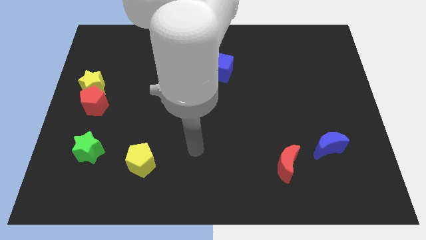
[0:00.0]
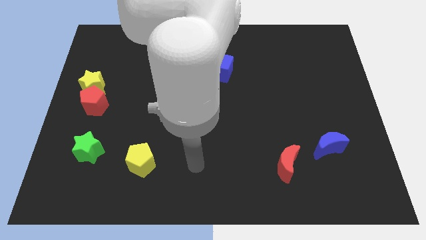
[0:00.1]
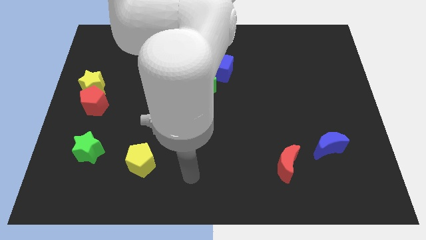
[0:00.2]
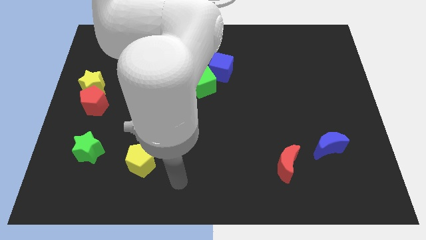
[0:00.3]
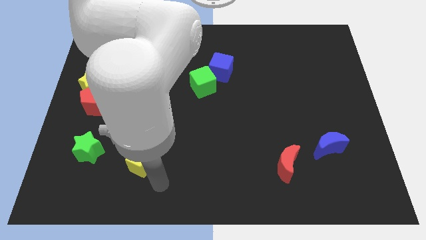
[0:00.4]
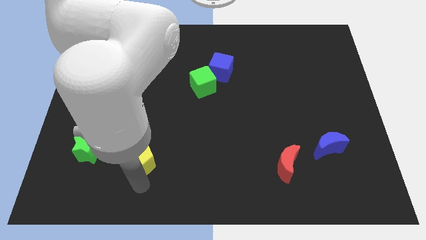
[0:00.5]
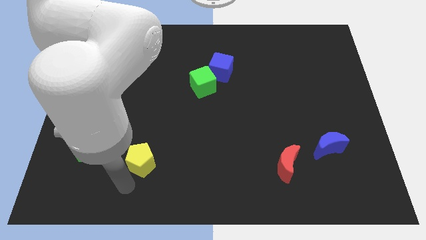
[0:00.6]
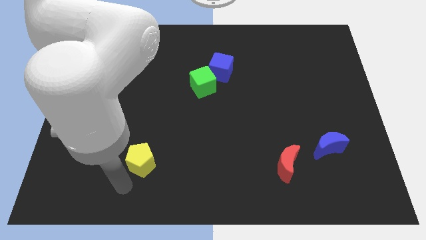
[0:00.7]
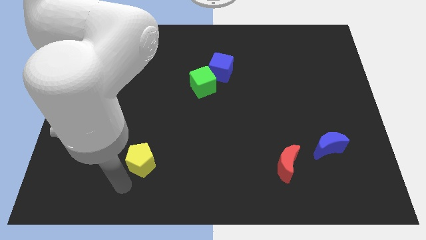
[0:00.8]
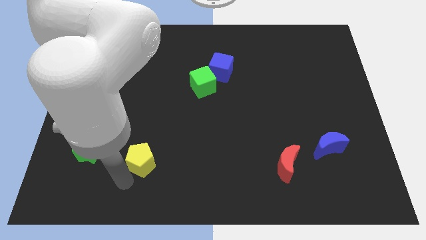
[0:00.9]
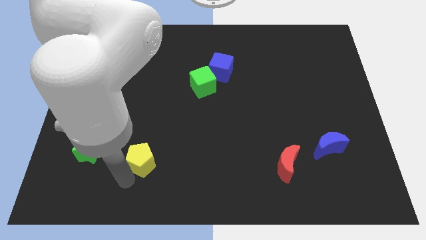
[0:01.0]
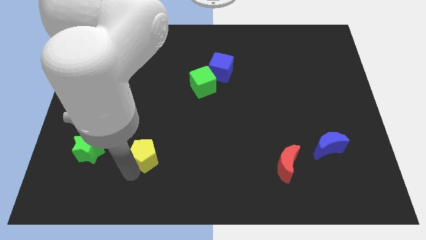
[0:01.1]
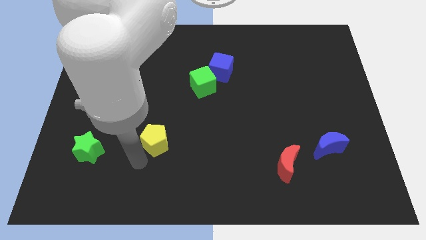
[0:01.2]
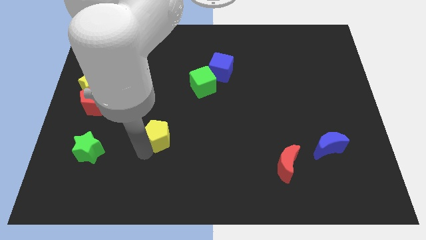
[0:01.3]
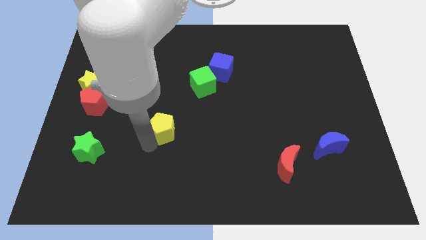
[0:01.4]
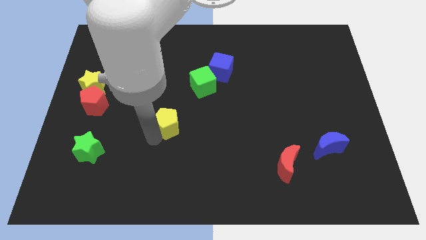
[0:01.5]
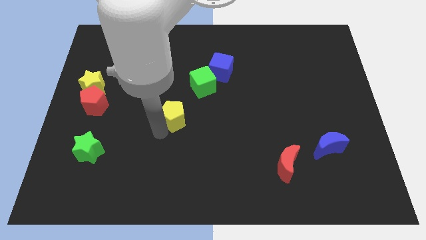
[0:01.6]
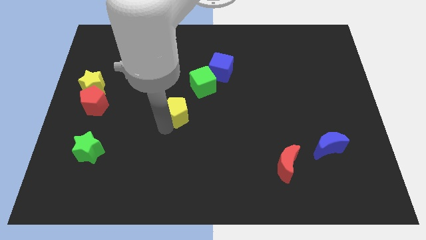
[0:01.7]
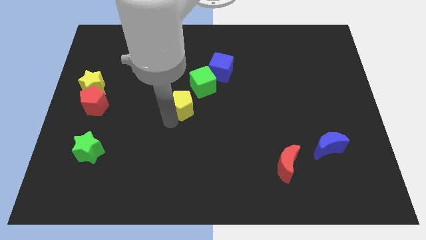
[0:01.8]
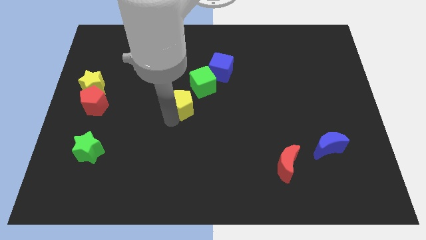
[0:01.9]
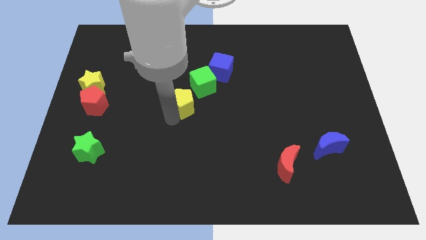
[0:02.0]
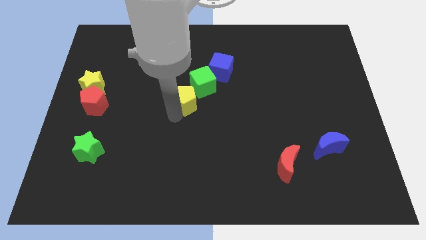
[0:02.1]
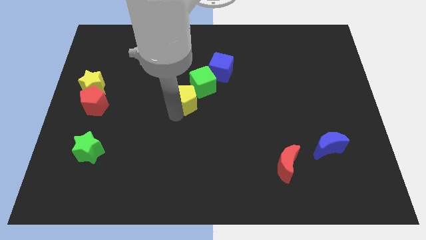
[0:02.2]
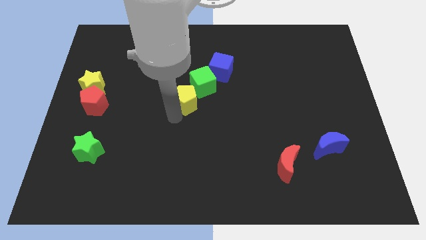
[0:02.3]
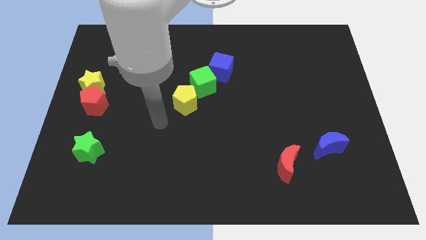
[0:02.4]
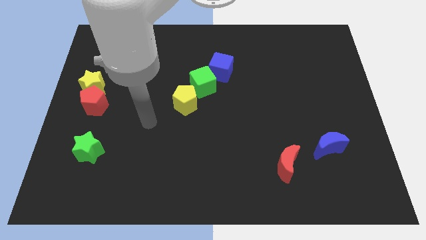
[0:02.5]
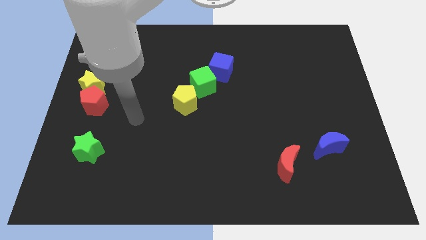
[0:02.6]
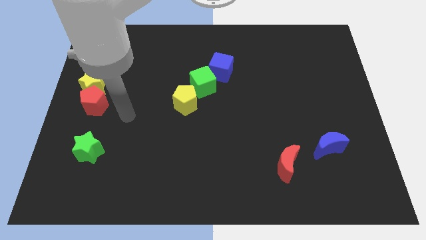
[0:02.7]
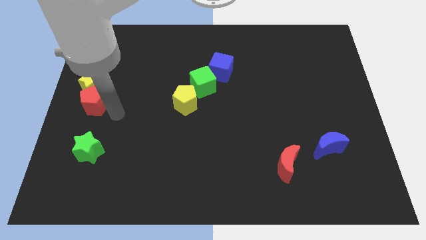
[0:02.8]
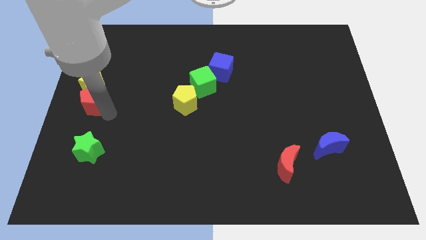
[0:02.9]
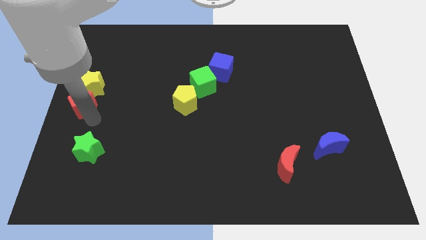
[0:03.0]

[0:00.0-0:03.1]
move yellow pentagon towards green cube

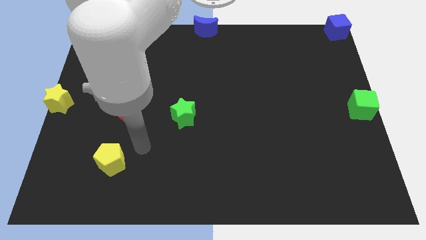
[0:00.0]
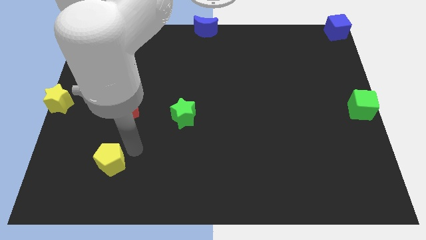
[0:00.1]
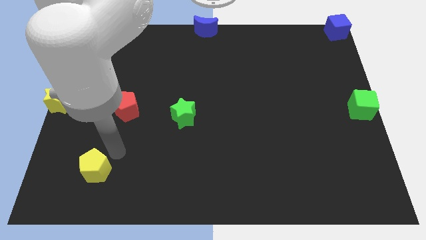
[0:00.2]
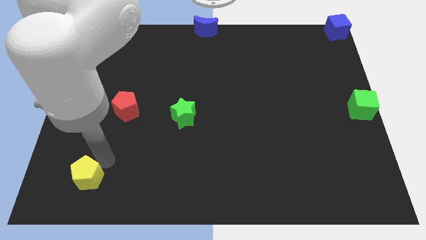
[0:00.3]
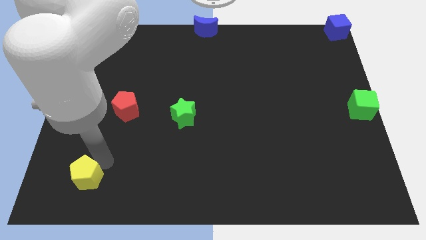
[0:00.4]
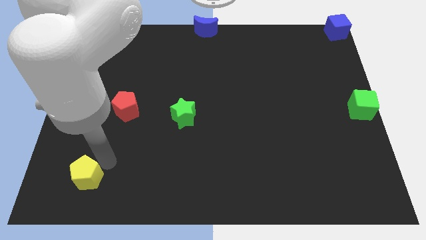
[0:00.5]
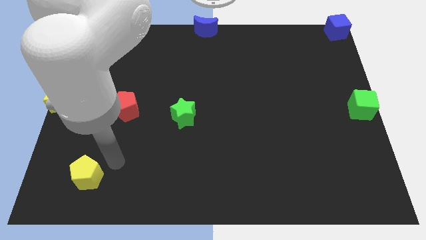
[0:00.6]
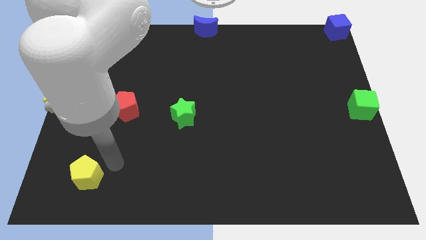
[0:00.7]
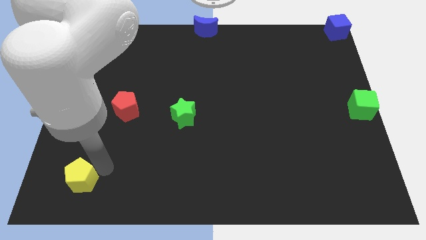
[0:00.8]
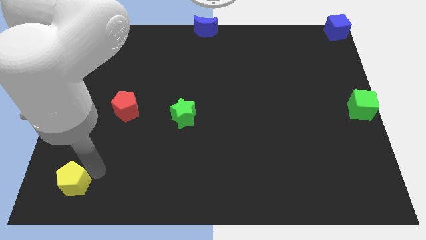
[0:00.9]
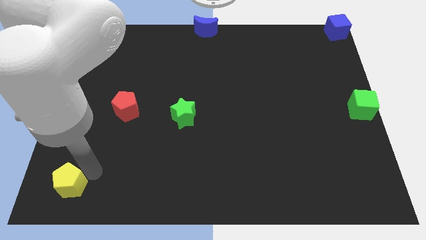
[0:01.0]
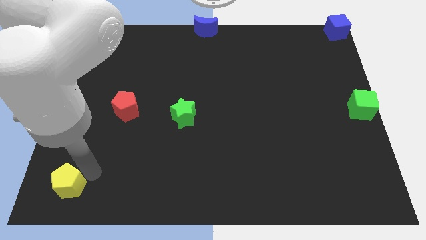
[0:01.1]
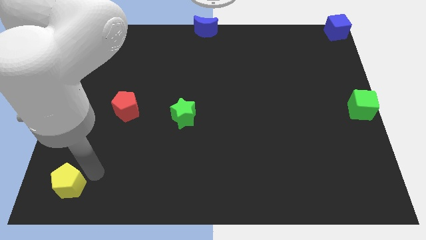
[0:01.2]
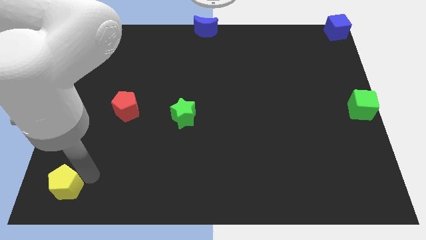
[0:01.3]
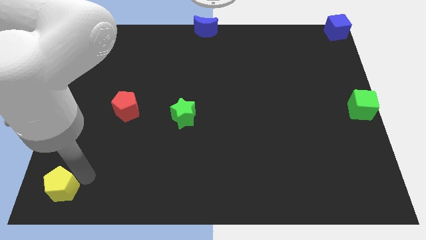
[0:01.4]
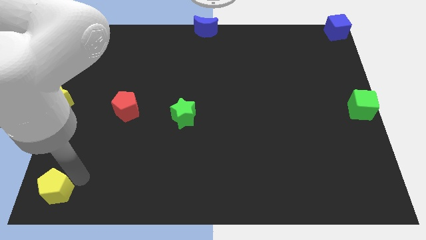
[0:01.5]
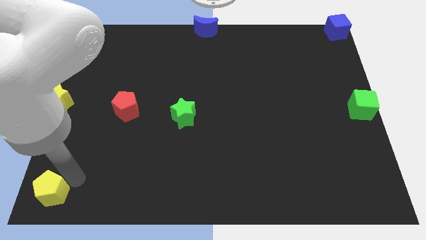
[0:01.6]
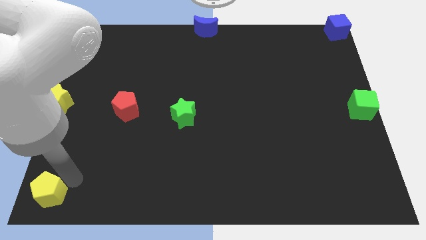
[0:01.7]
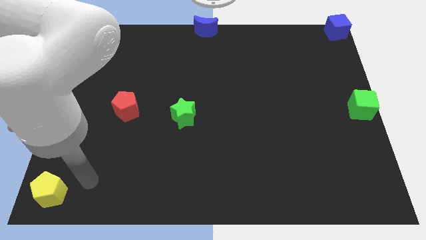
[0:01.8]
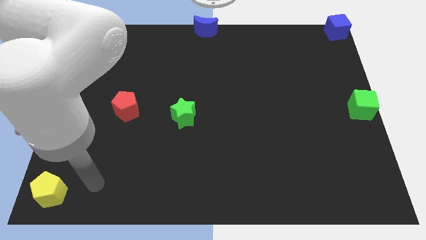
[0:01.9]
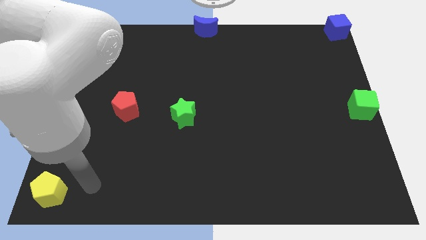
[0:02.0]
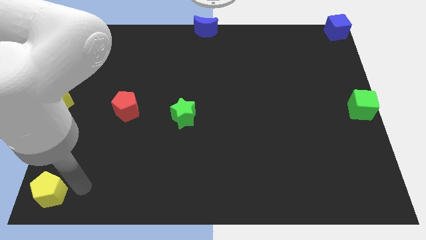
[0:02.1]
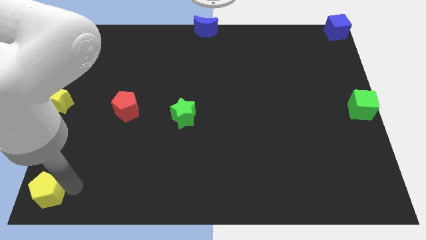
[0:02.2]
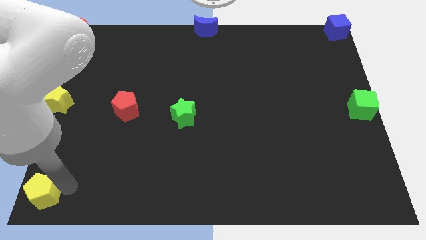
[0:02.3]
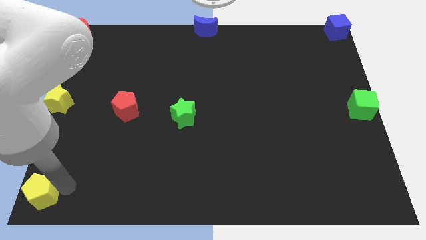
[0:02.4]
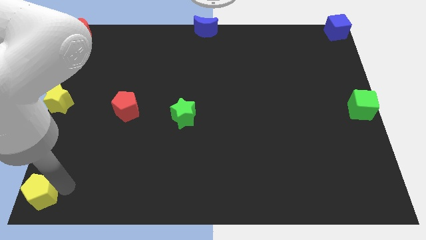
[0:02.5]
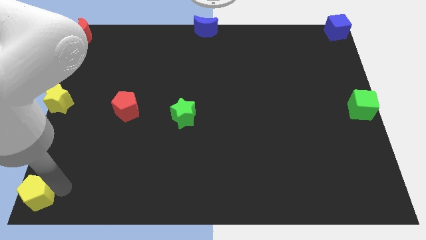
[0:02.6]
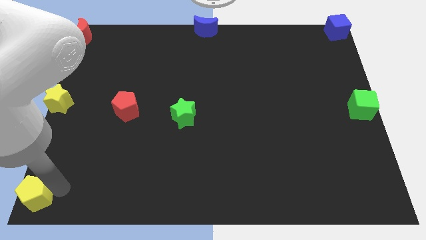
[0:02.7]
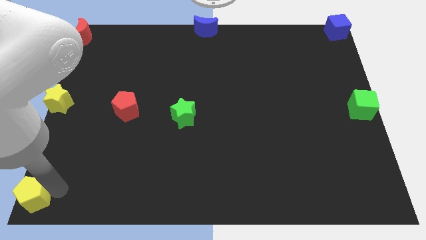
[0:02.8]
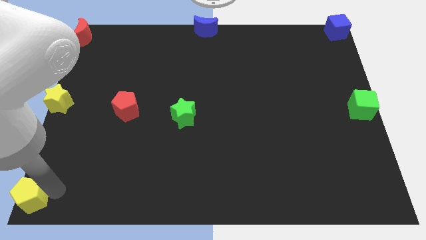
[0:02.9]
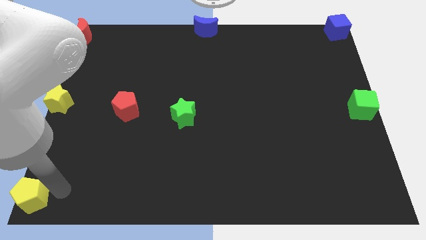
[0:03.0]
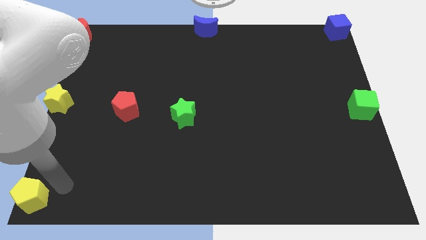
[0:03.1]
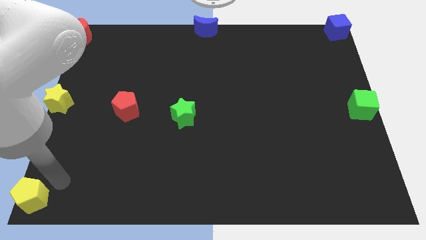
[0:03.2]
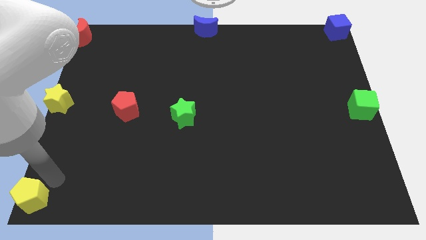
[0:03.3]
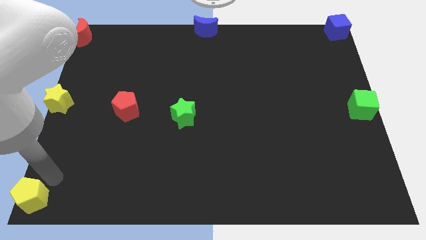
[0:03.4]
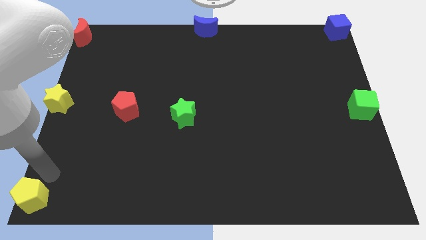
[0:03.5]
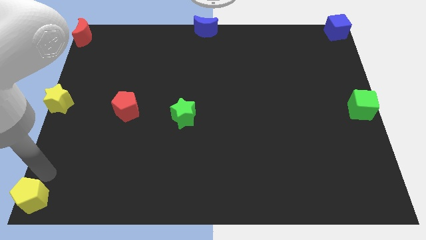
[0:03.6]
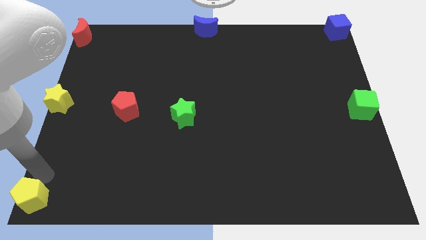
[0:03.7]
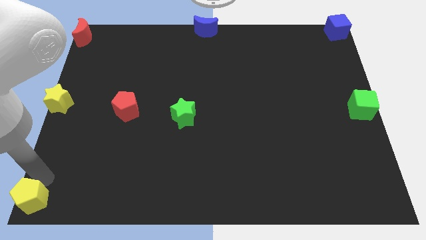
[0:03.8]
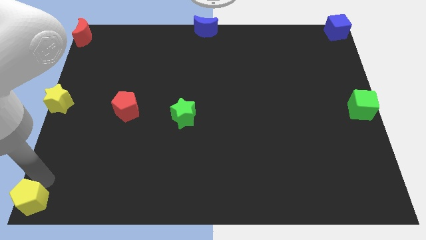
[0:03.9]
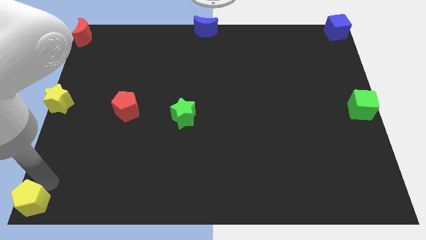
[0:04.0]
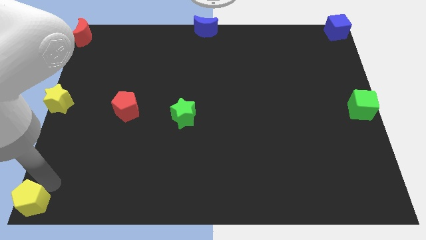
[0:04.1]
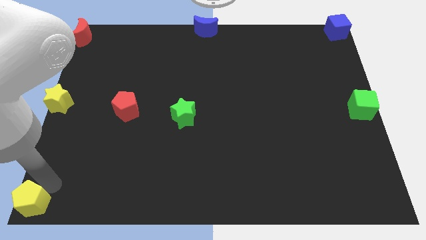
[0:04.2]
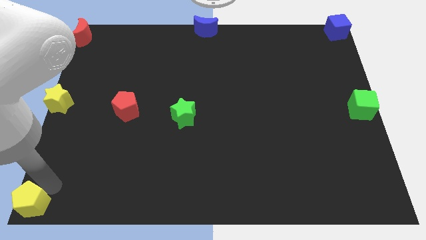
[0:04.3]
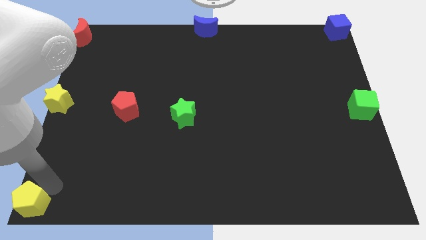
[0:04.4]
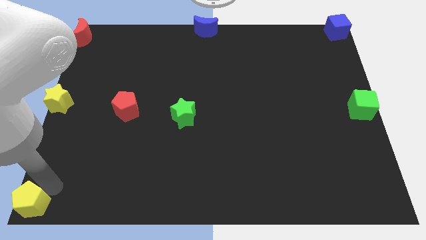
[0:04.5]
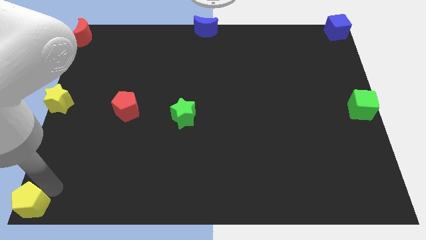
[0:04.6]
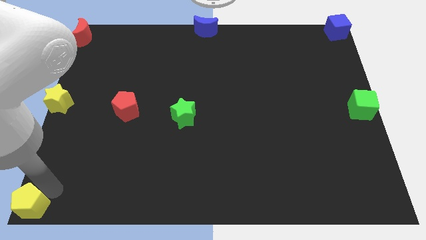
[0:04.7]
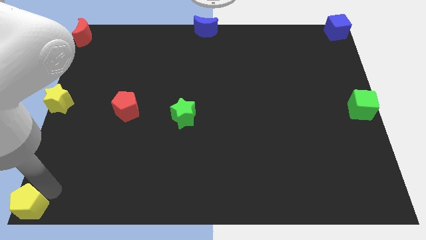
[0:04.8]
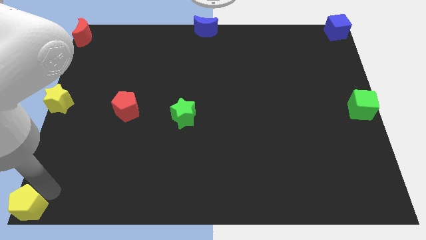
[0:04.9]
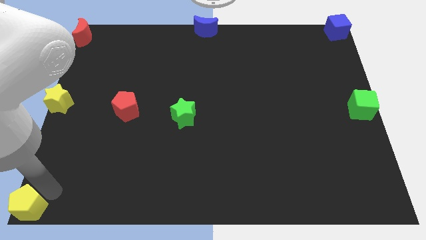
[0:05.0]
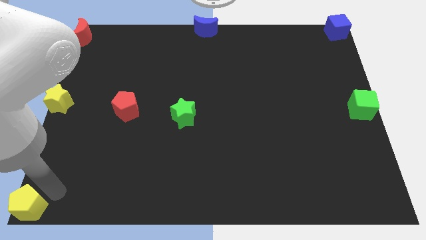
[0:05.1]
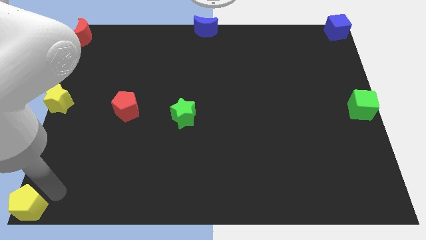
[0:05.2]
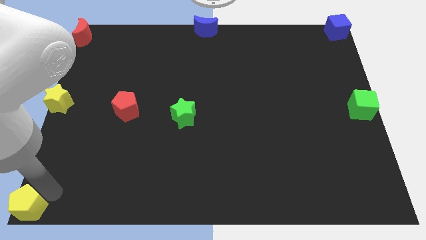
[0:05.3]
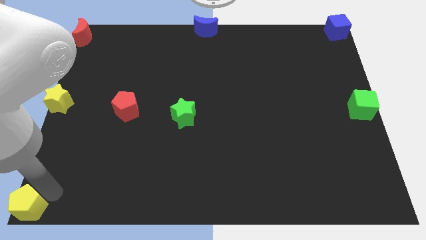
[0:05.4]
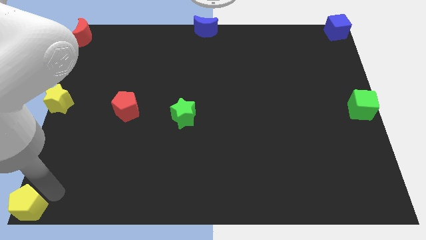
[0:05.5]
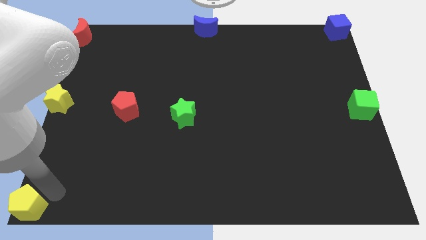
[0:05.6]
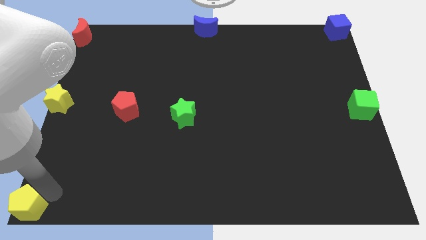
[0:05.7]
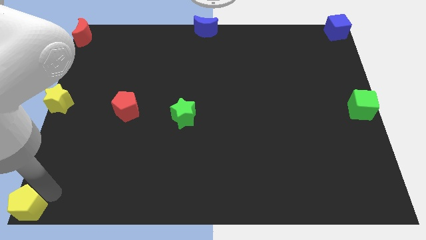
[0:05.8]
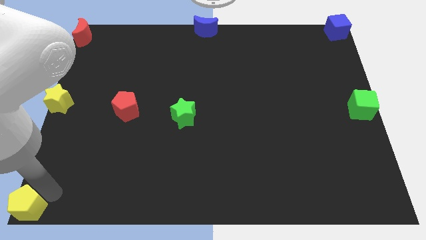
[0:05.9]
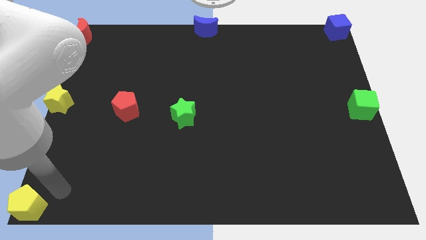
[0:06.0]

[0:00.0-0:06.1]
push the yellow pentagon to the bottom left corner of the board
